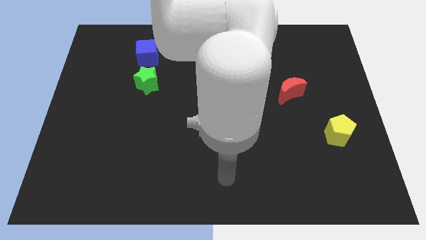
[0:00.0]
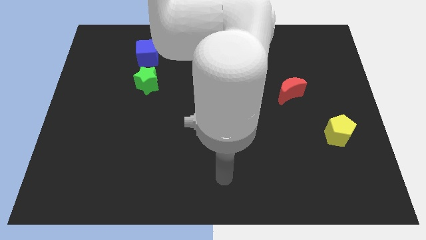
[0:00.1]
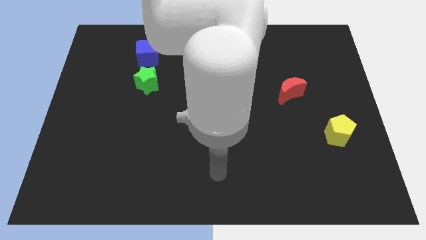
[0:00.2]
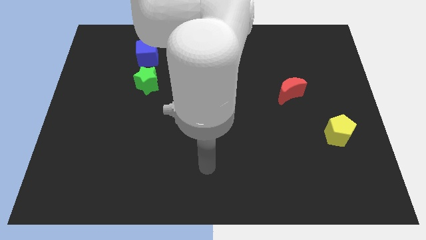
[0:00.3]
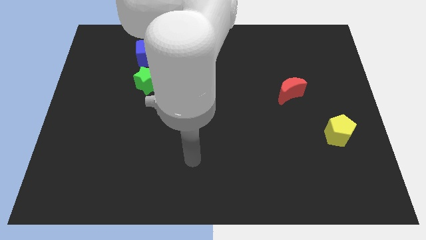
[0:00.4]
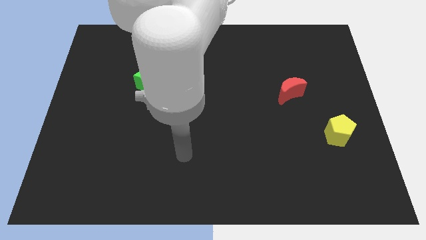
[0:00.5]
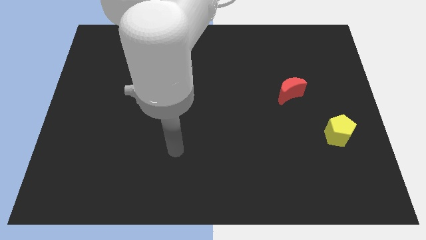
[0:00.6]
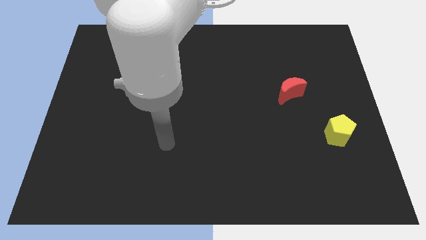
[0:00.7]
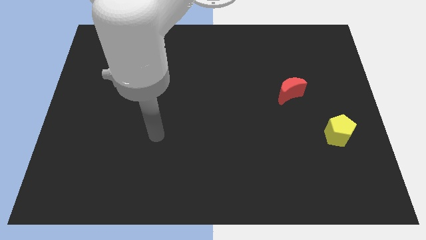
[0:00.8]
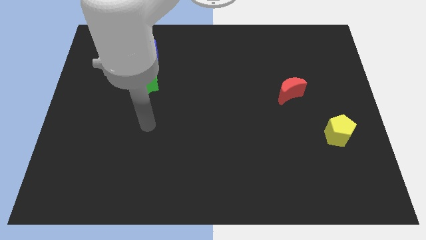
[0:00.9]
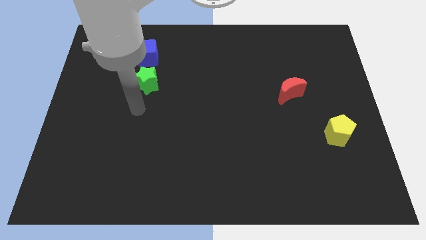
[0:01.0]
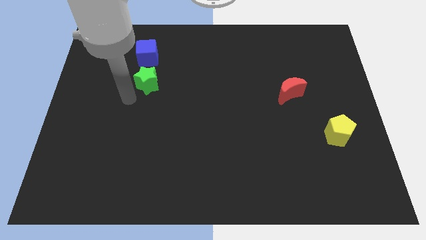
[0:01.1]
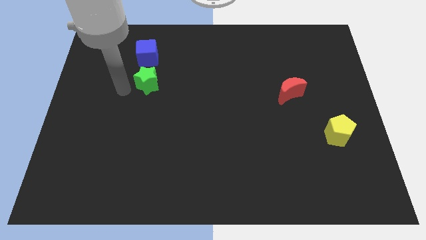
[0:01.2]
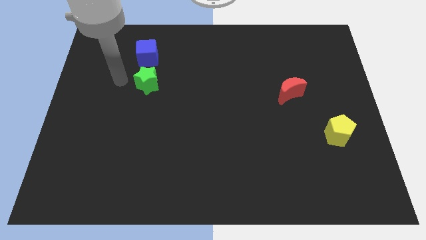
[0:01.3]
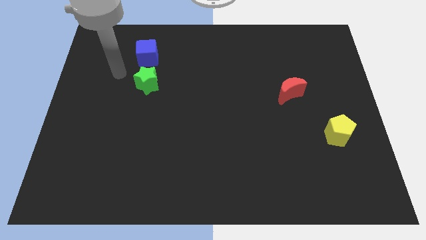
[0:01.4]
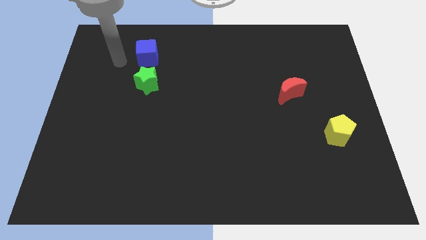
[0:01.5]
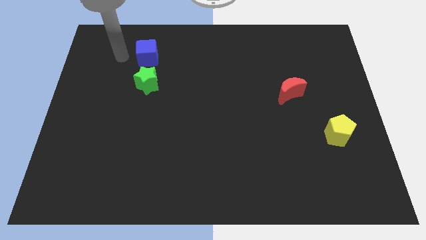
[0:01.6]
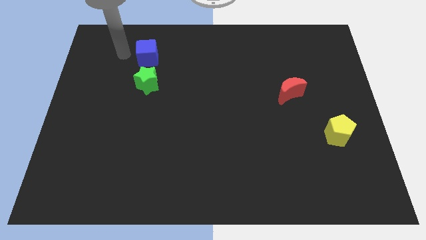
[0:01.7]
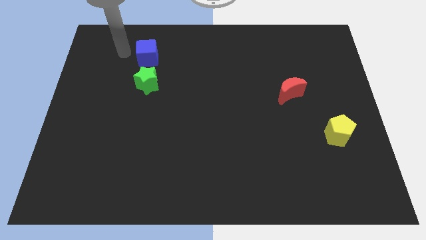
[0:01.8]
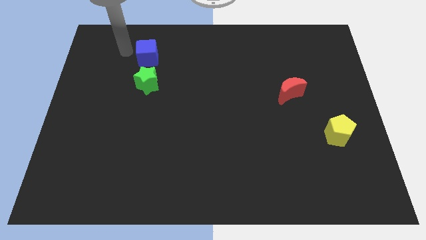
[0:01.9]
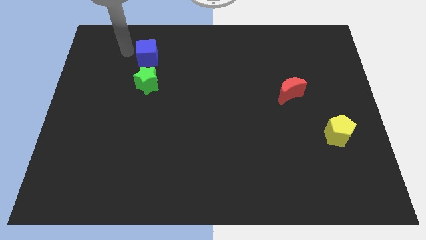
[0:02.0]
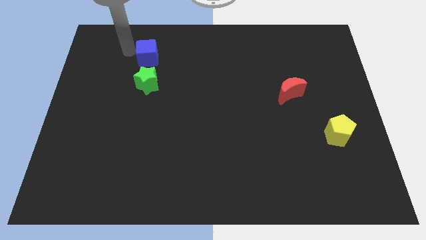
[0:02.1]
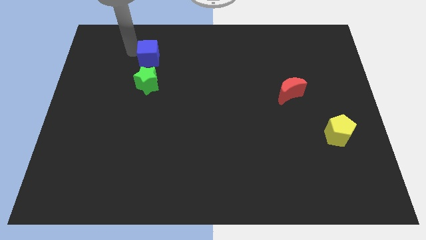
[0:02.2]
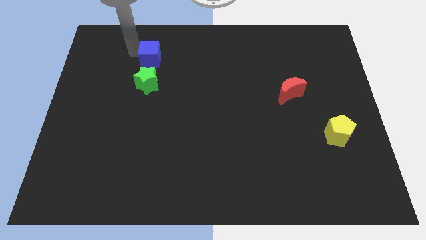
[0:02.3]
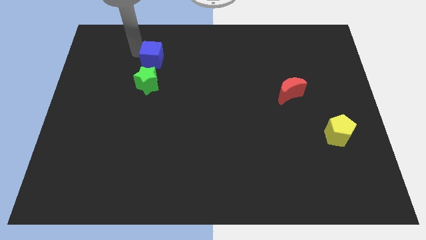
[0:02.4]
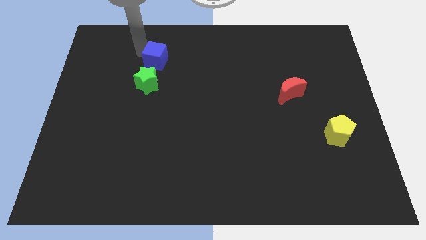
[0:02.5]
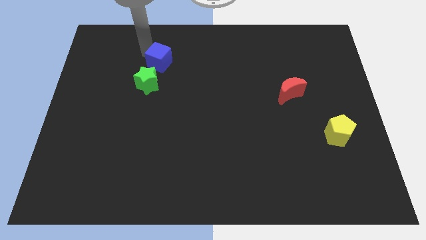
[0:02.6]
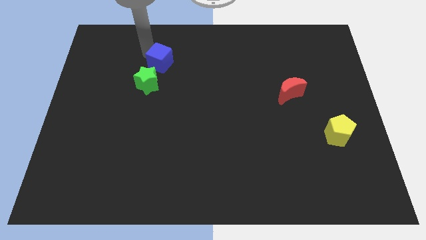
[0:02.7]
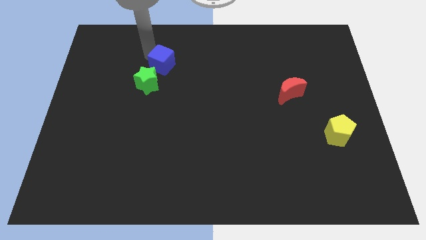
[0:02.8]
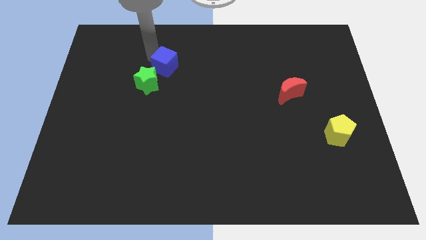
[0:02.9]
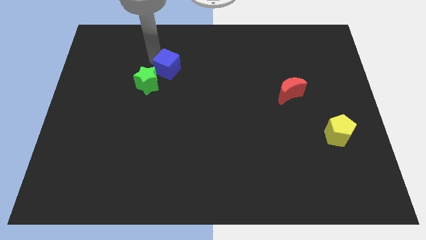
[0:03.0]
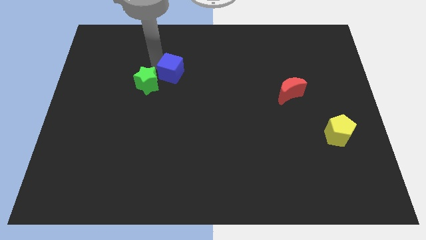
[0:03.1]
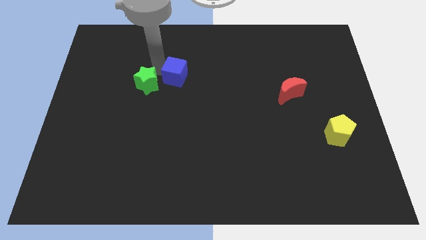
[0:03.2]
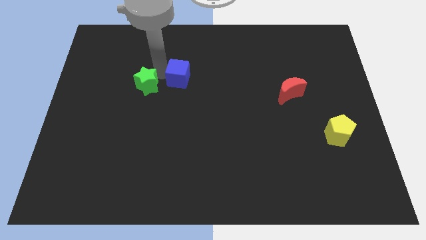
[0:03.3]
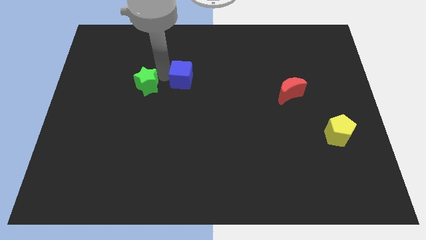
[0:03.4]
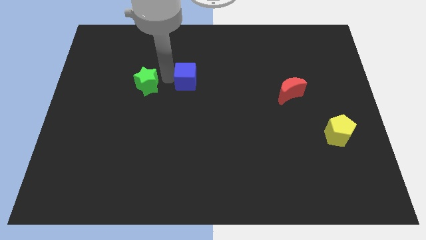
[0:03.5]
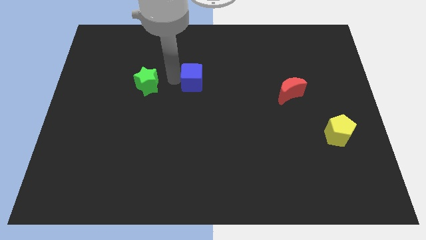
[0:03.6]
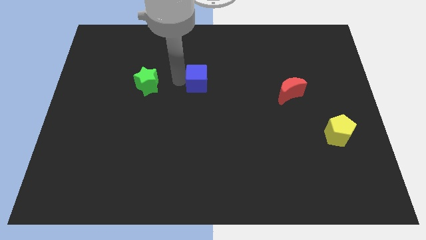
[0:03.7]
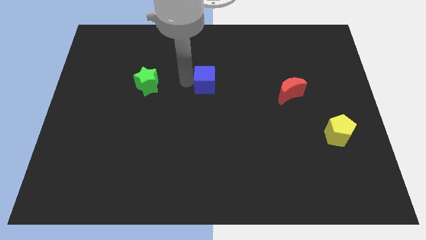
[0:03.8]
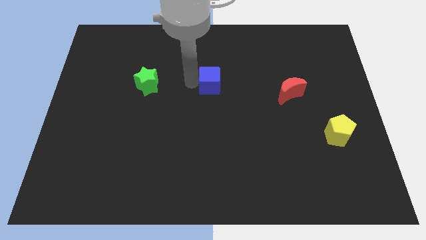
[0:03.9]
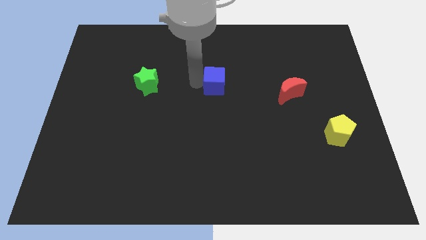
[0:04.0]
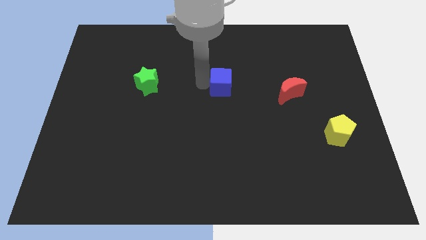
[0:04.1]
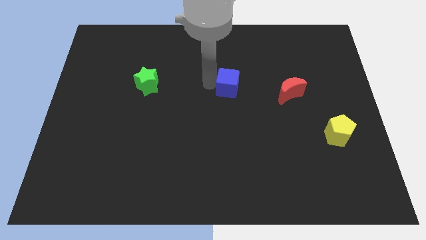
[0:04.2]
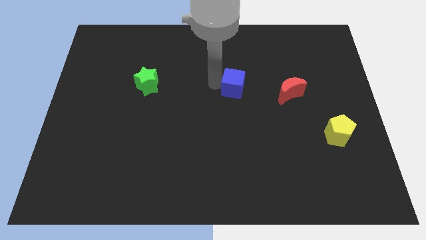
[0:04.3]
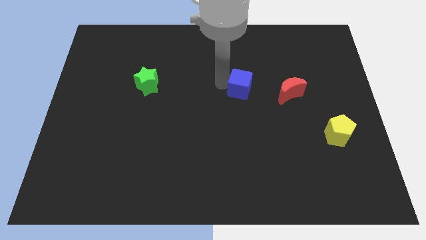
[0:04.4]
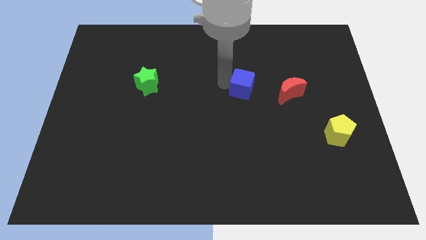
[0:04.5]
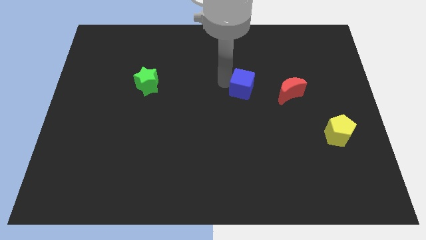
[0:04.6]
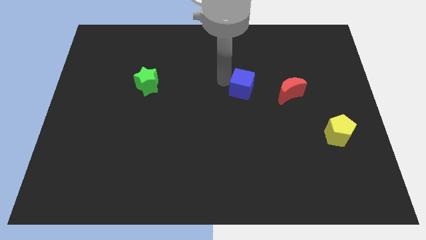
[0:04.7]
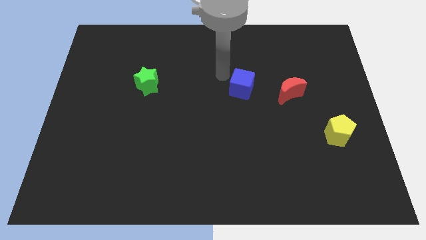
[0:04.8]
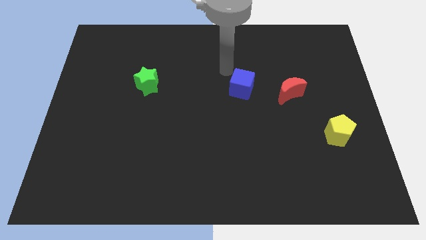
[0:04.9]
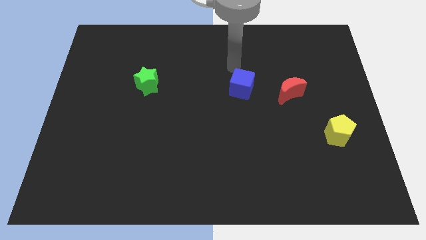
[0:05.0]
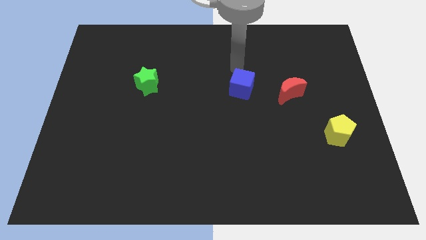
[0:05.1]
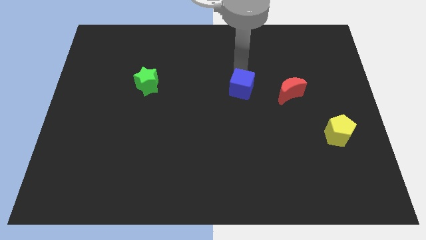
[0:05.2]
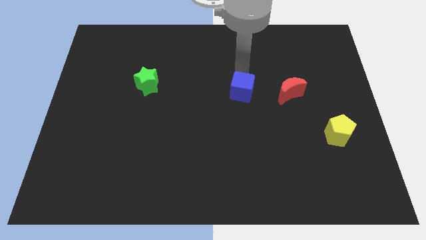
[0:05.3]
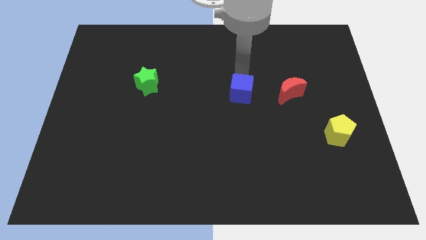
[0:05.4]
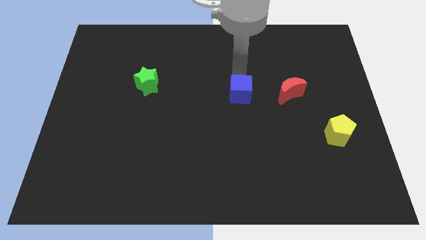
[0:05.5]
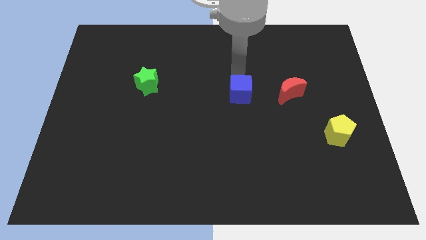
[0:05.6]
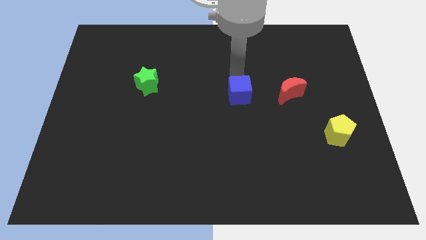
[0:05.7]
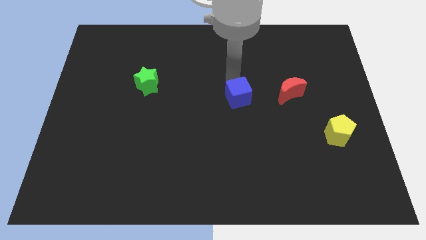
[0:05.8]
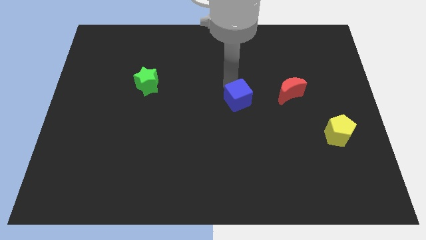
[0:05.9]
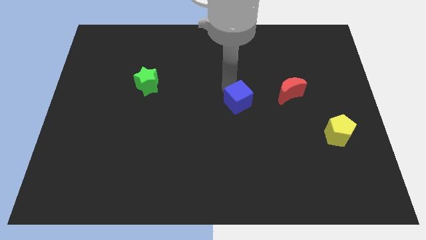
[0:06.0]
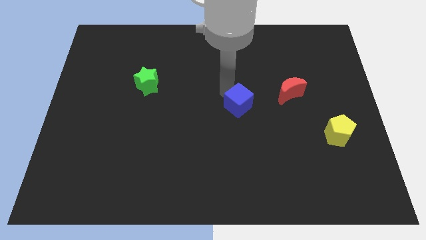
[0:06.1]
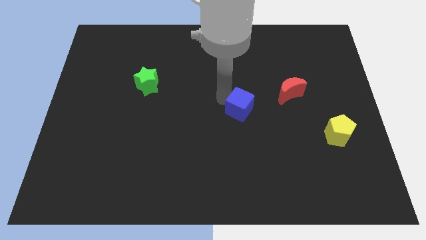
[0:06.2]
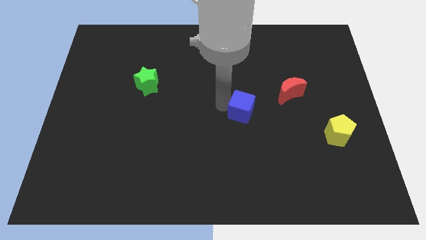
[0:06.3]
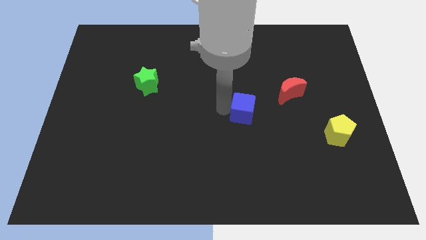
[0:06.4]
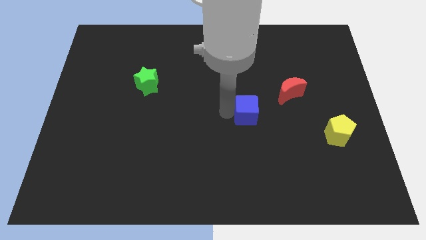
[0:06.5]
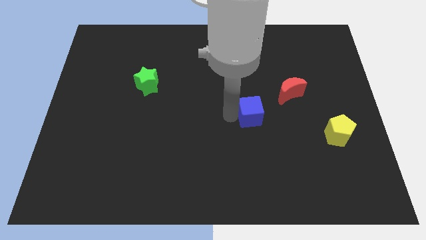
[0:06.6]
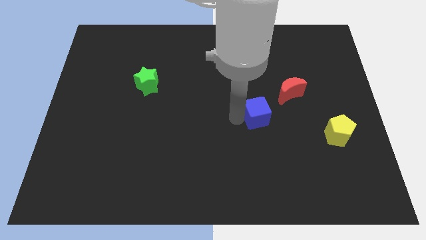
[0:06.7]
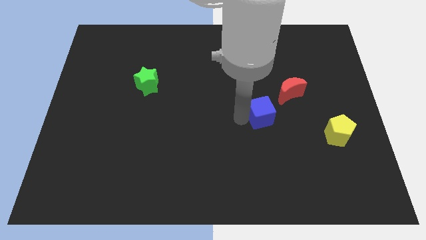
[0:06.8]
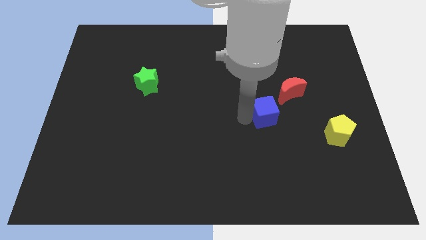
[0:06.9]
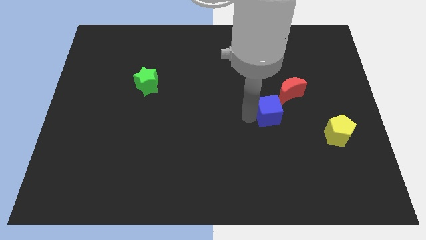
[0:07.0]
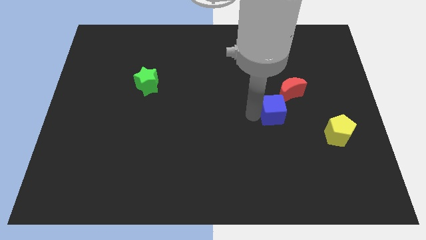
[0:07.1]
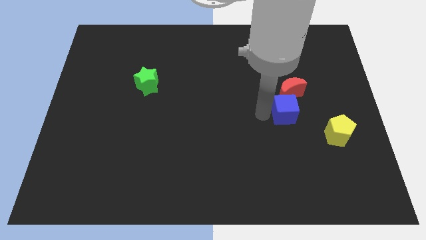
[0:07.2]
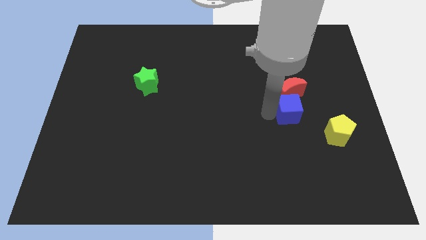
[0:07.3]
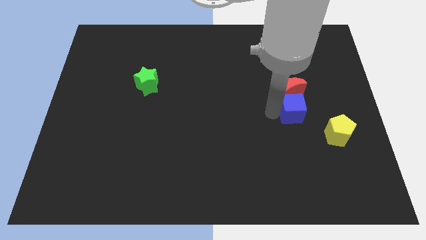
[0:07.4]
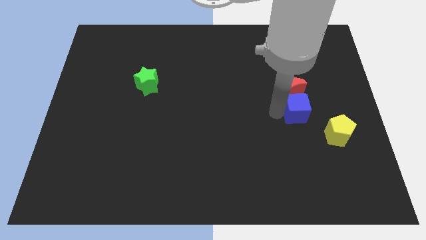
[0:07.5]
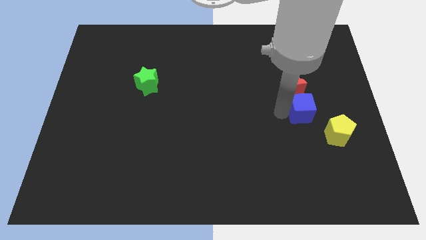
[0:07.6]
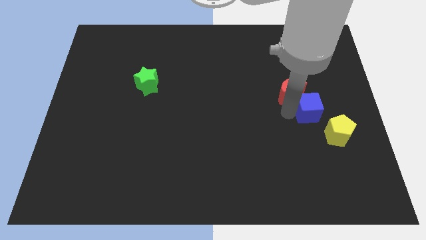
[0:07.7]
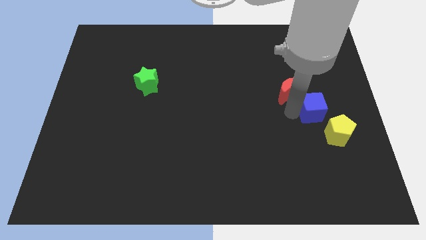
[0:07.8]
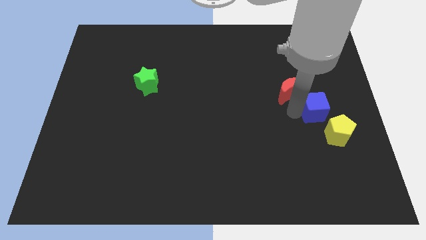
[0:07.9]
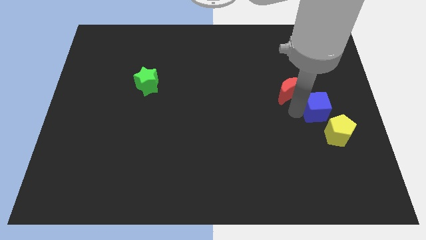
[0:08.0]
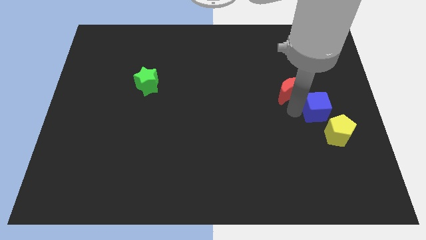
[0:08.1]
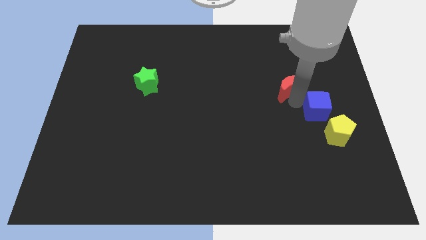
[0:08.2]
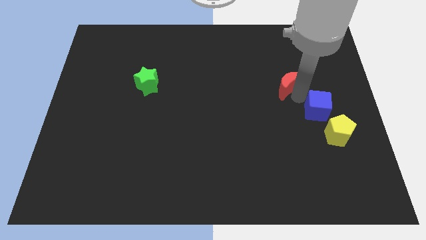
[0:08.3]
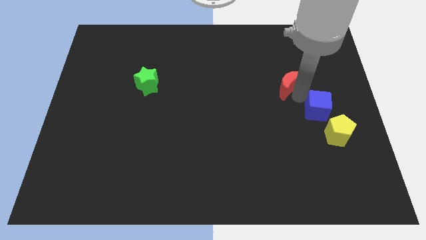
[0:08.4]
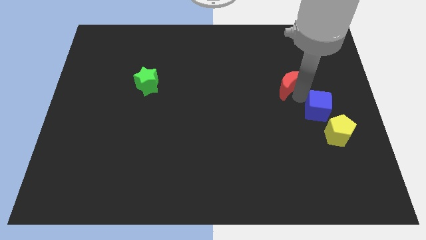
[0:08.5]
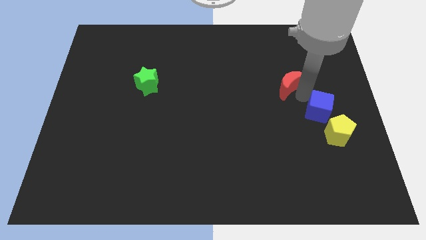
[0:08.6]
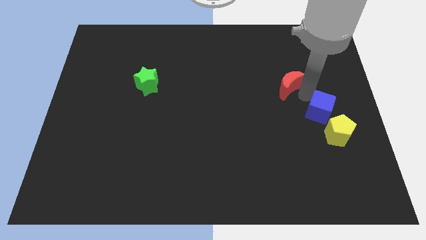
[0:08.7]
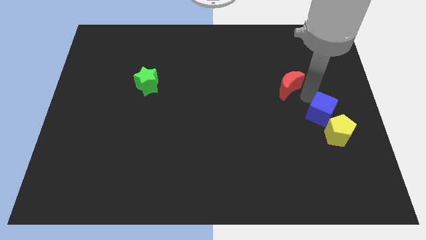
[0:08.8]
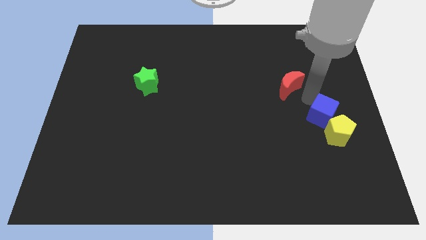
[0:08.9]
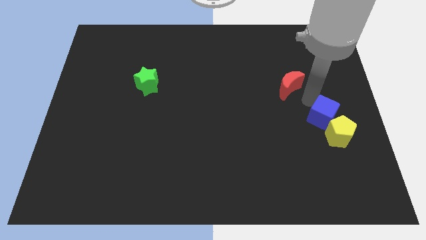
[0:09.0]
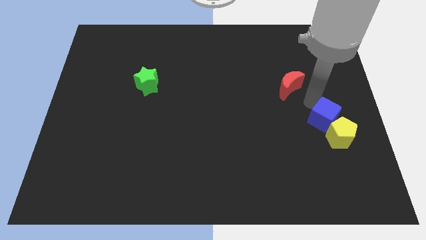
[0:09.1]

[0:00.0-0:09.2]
move the cube next to the pentagon
